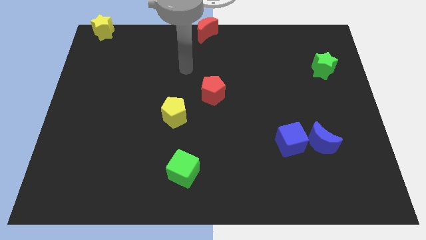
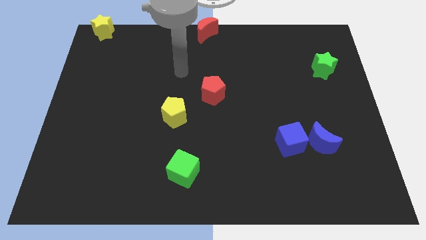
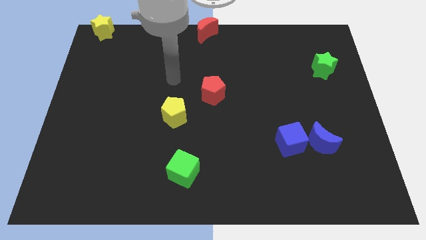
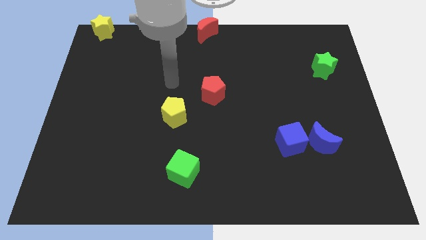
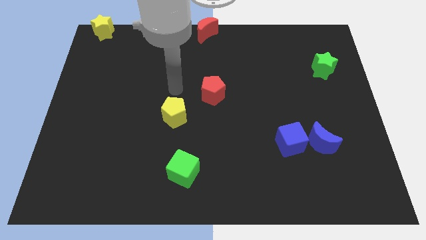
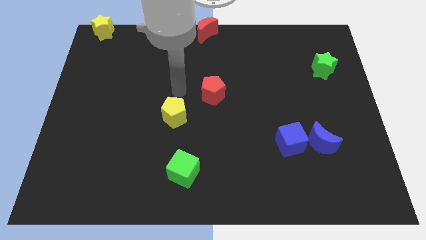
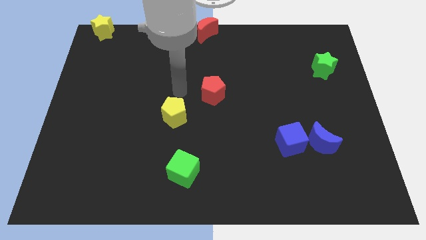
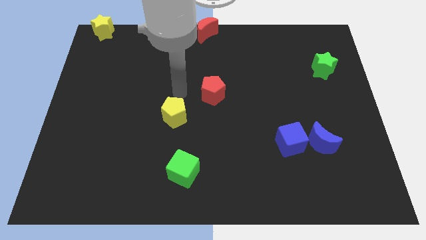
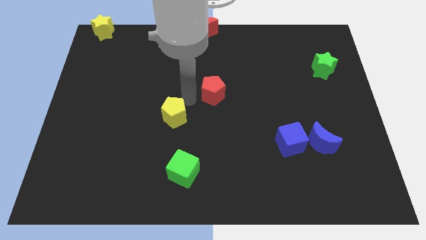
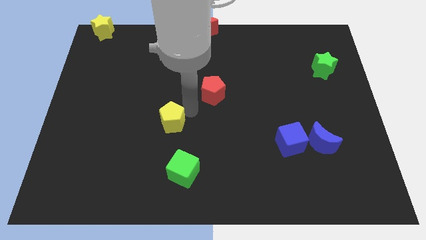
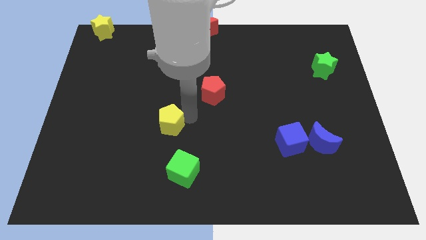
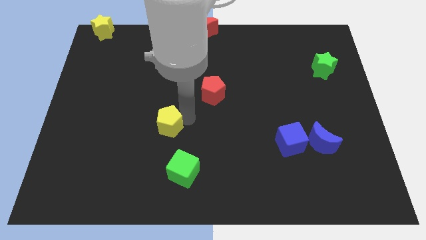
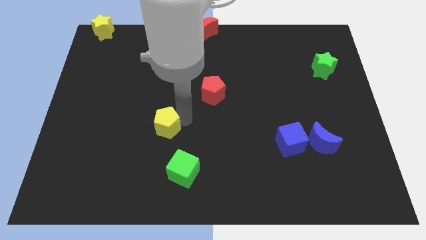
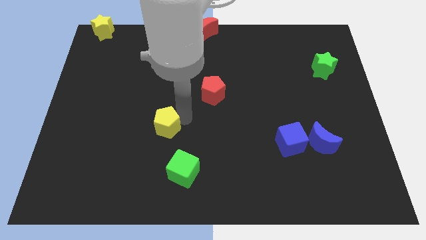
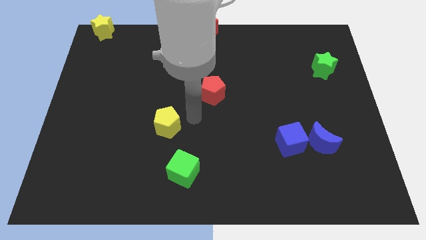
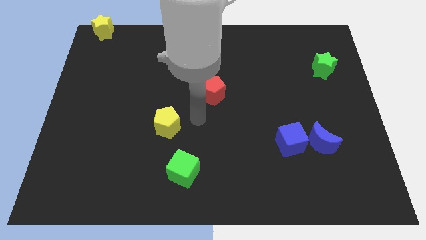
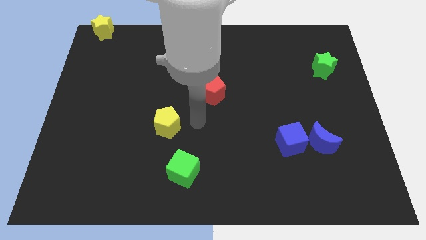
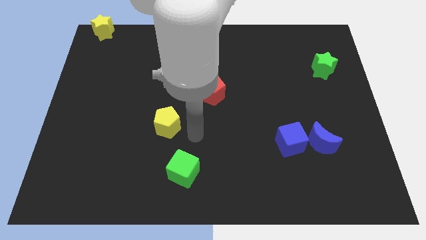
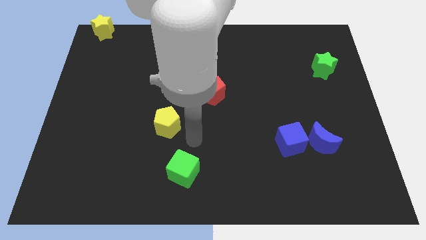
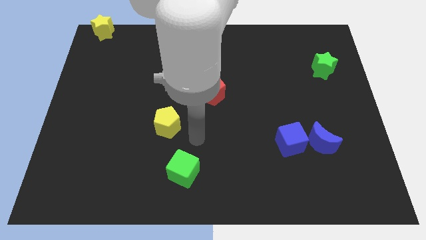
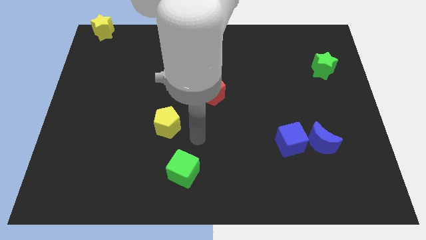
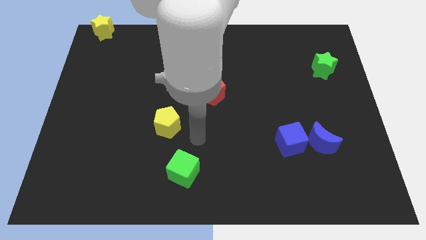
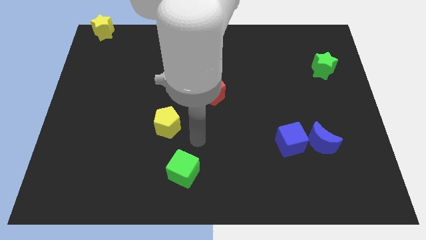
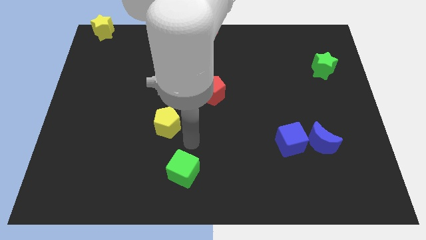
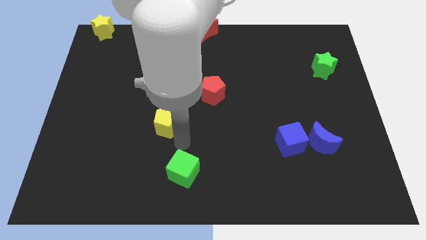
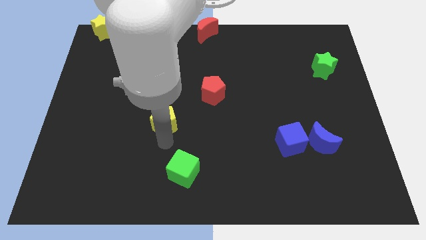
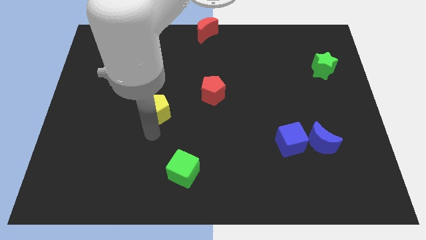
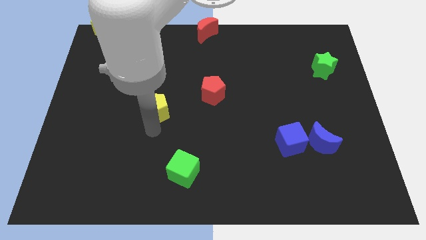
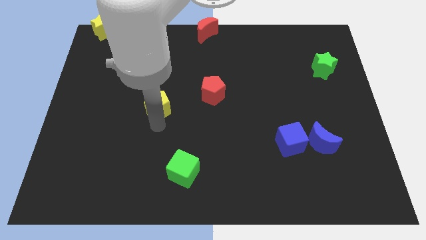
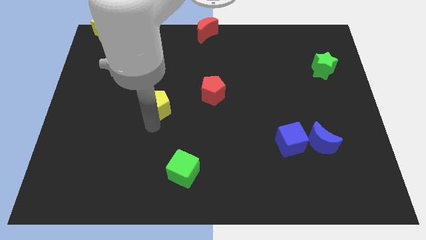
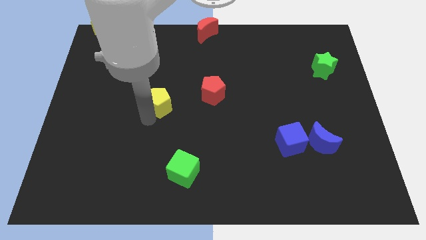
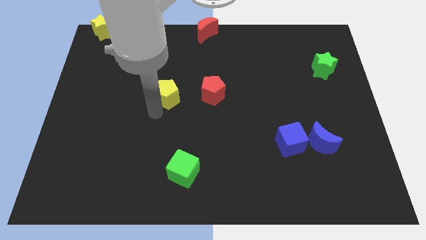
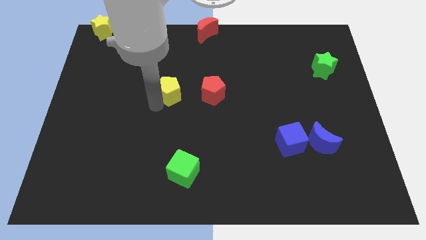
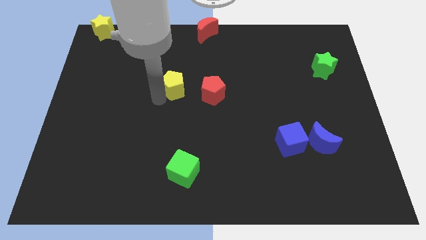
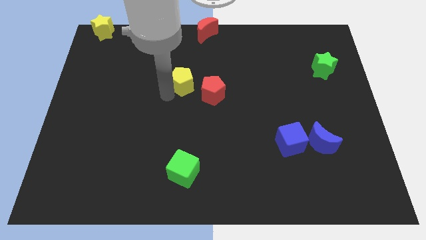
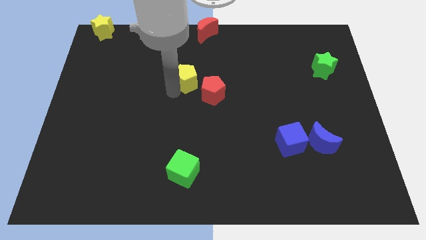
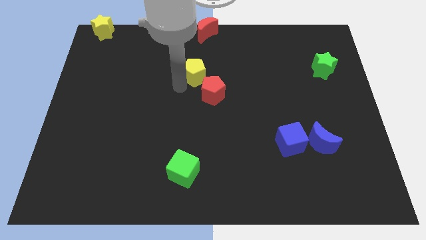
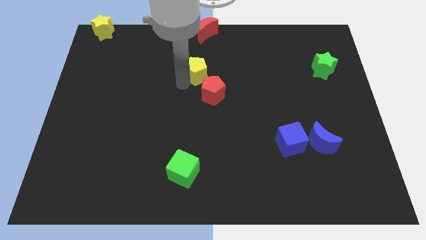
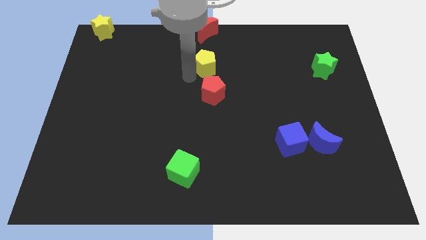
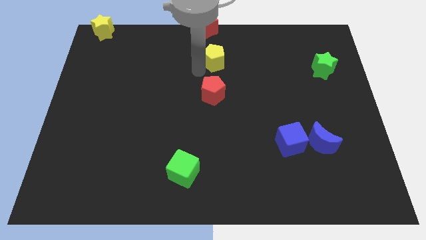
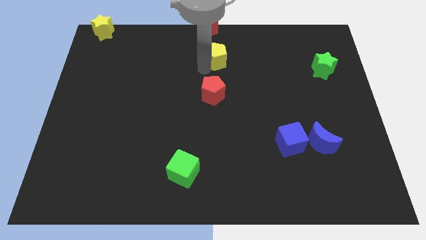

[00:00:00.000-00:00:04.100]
move the yellow pentagon in between the red moon and red pentagon

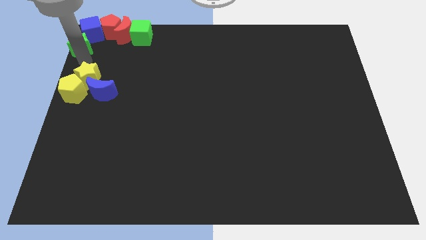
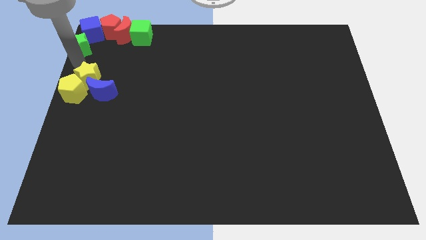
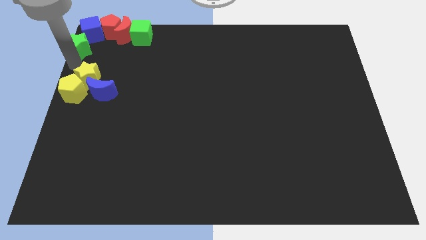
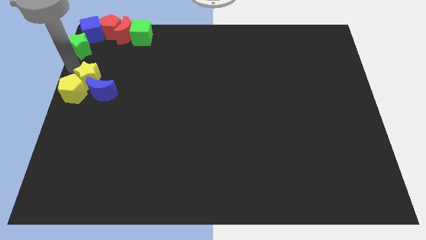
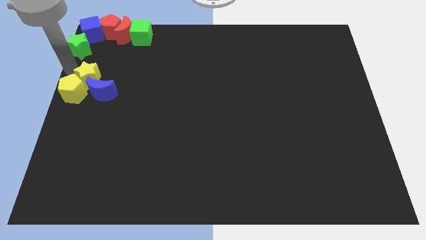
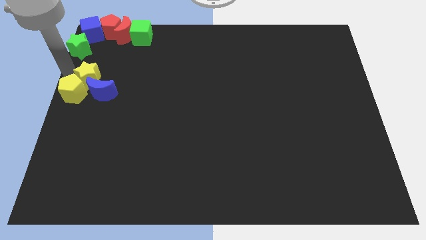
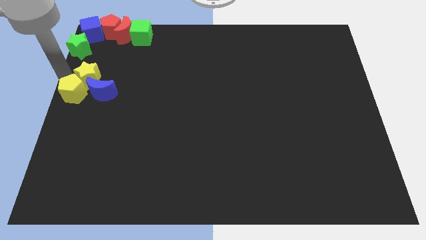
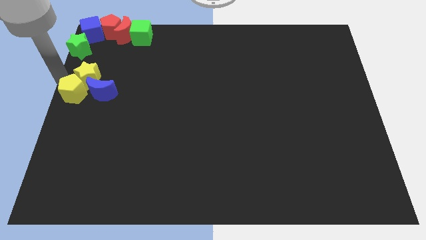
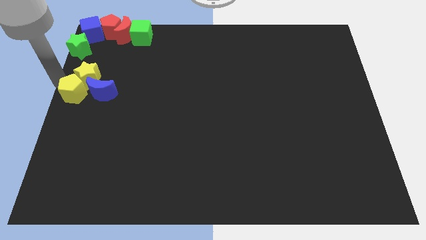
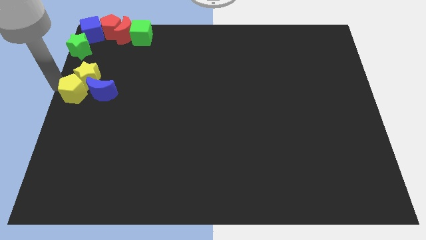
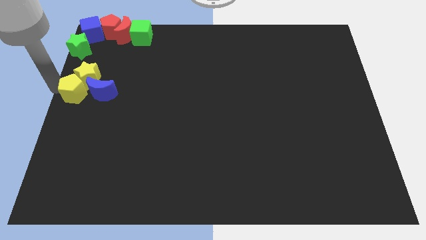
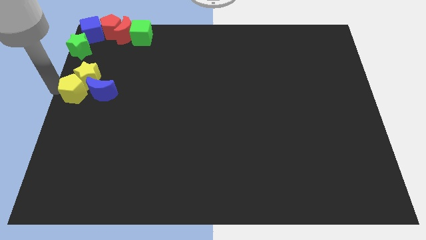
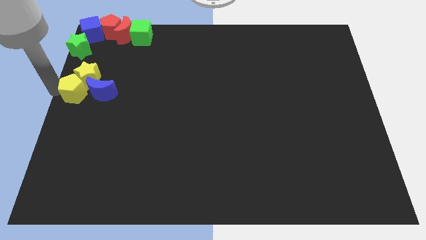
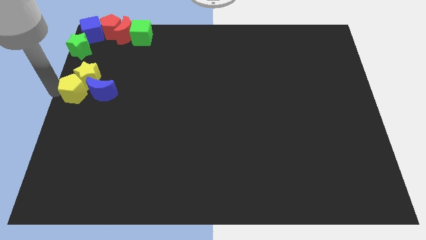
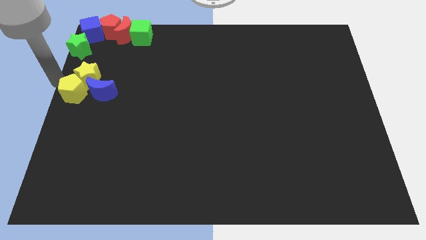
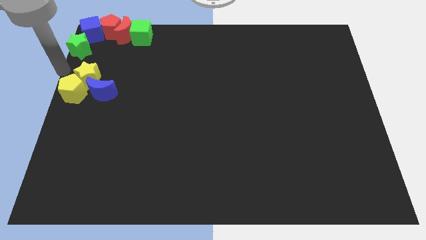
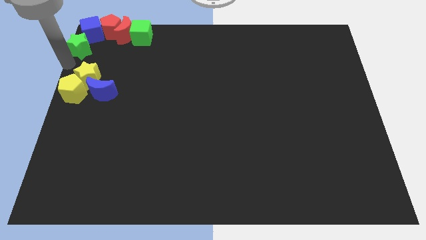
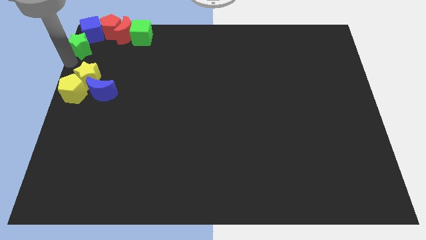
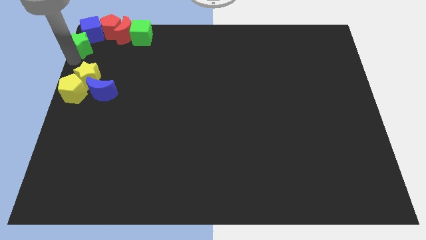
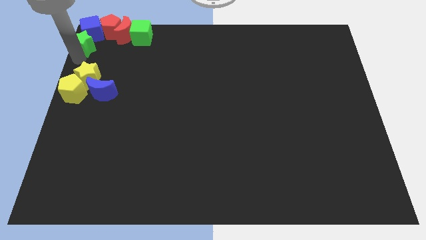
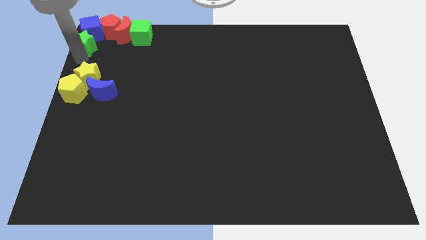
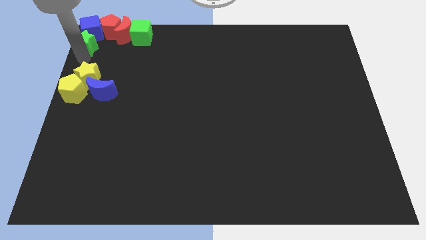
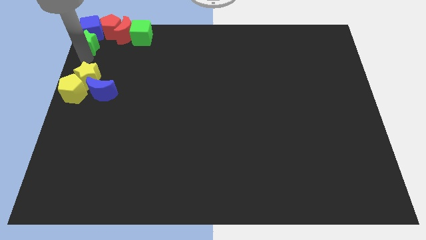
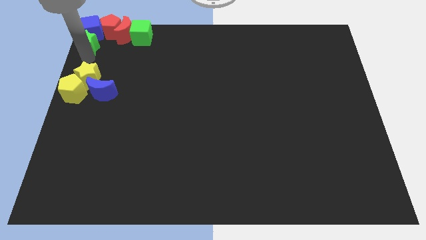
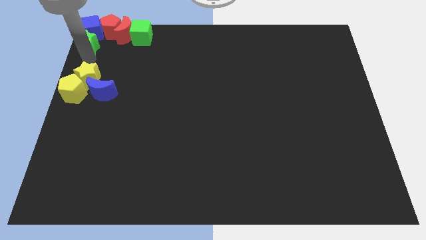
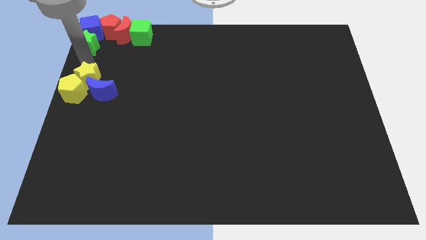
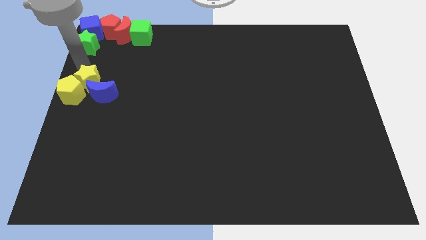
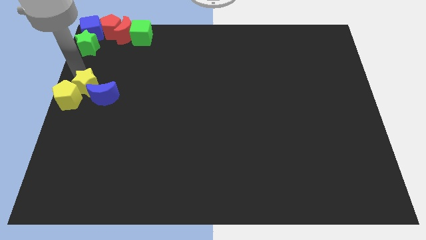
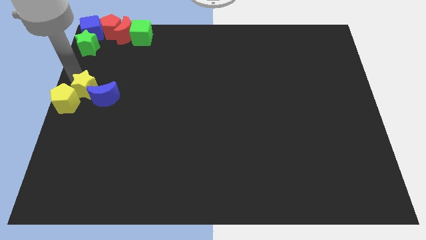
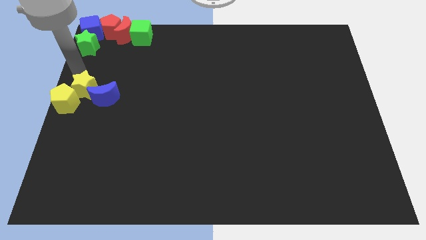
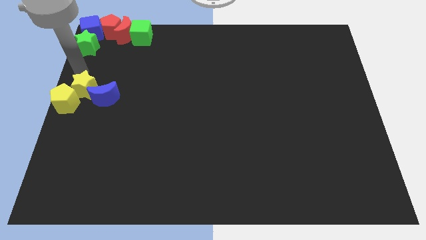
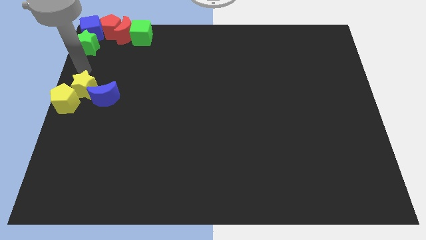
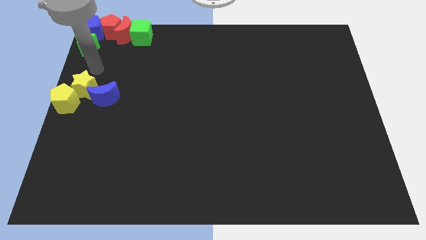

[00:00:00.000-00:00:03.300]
push the green star into the blue cube

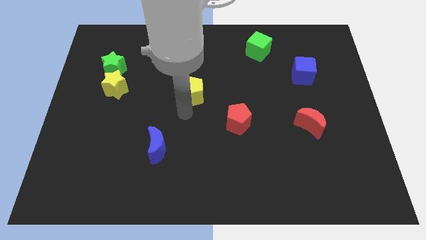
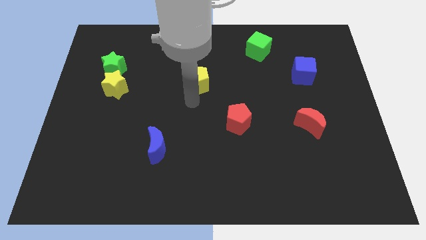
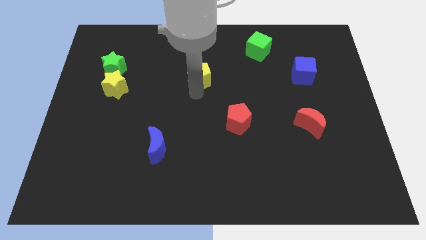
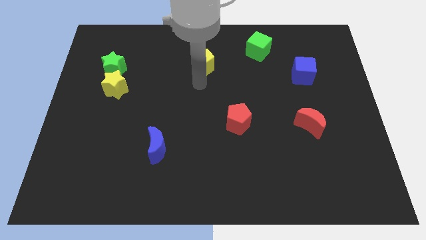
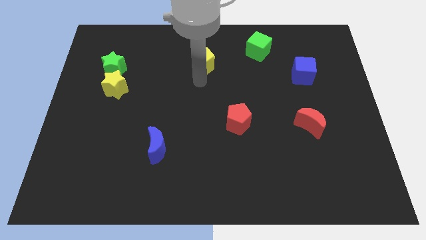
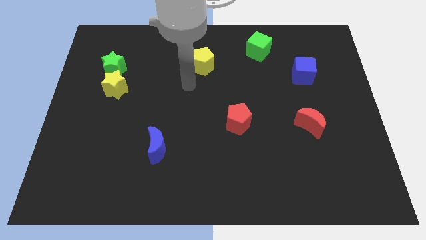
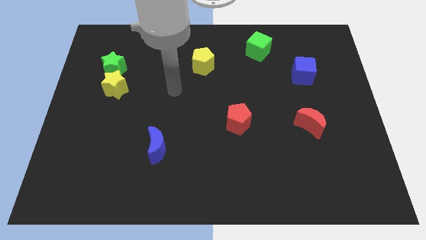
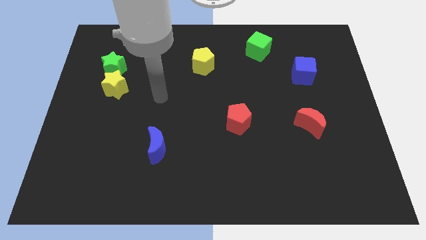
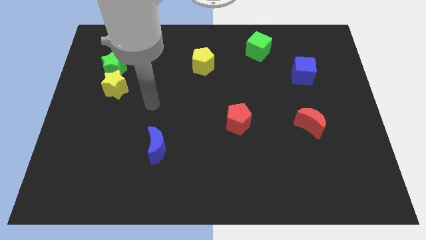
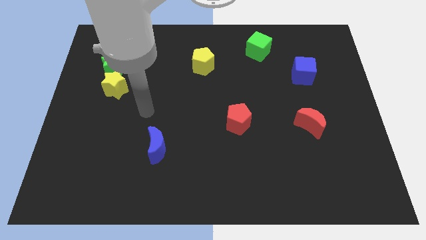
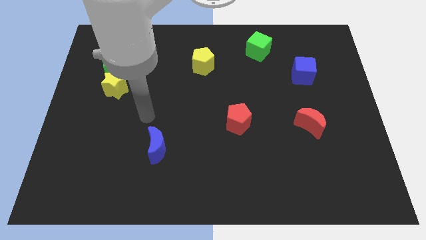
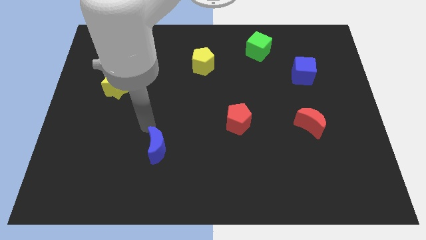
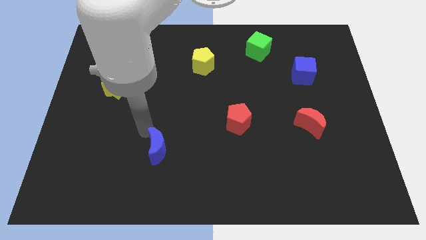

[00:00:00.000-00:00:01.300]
drag the yellow pentagon upwards

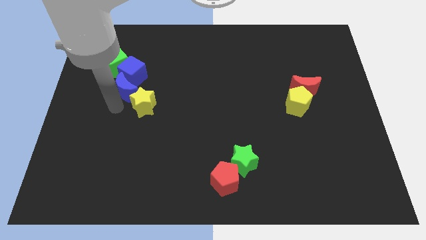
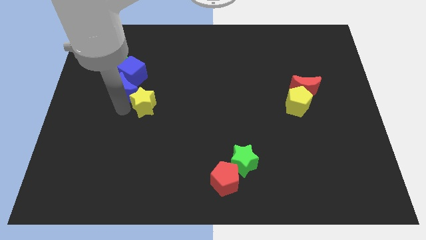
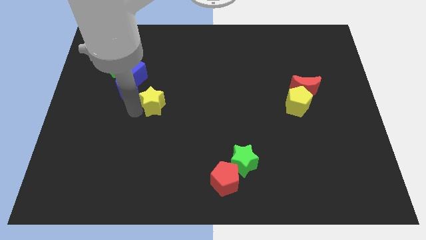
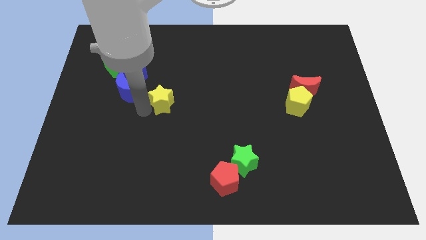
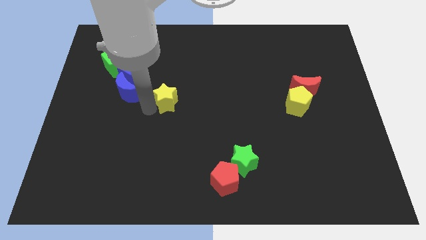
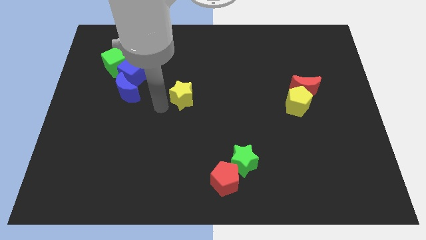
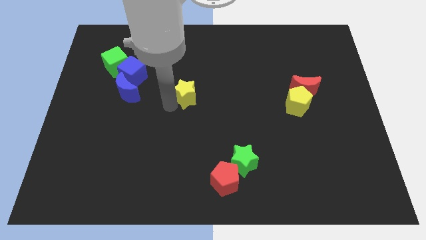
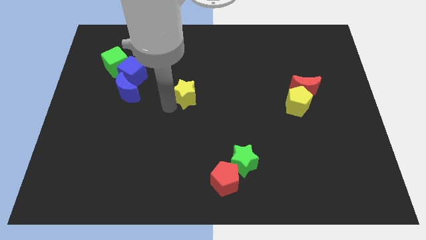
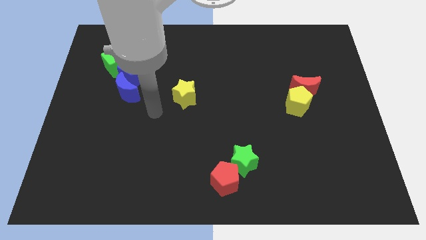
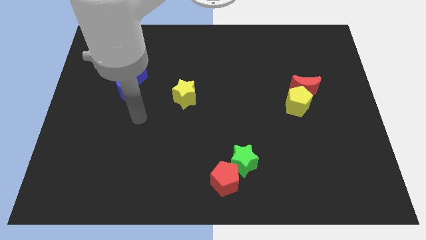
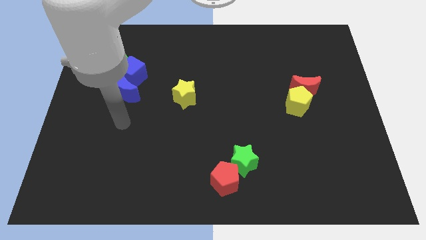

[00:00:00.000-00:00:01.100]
push the yellow star towards the center of the board
